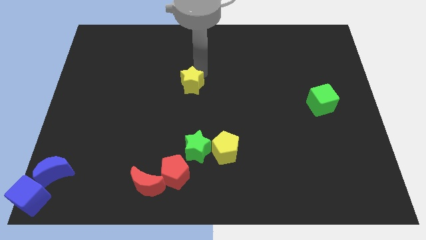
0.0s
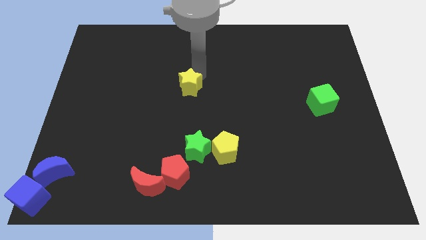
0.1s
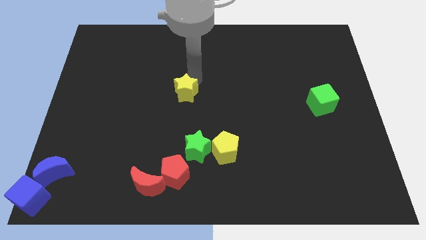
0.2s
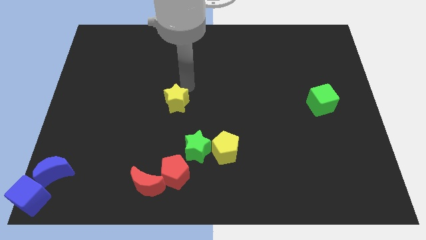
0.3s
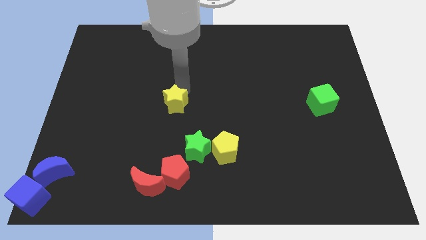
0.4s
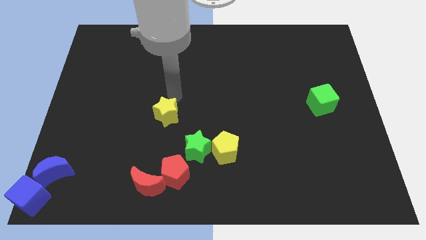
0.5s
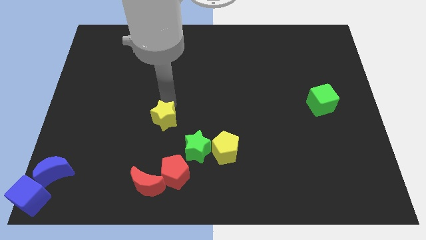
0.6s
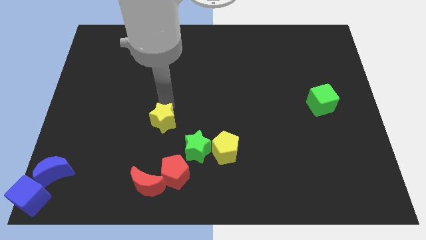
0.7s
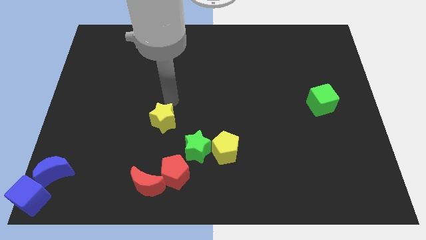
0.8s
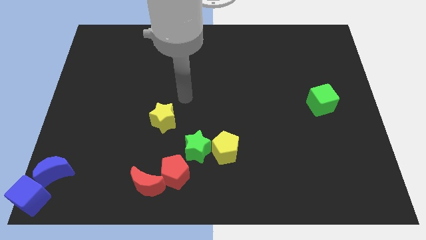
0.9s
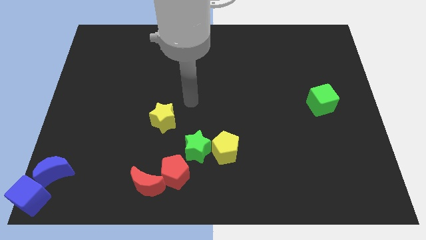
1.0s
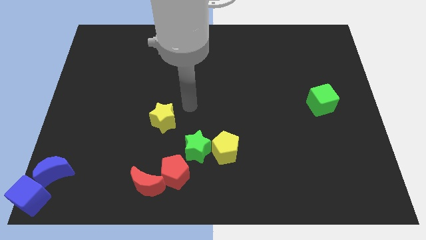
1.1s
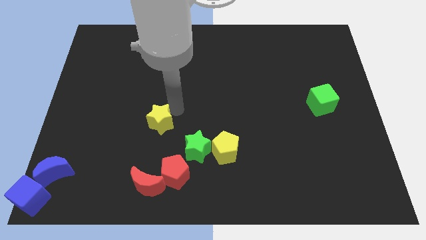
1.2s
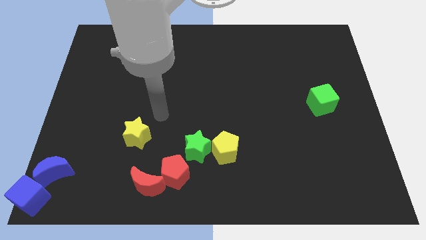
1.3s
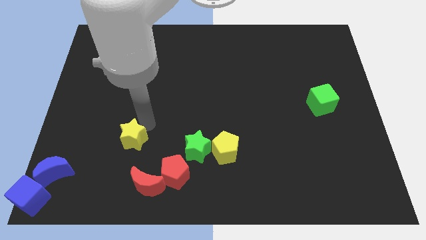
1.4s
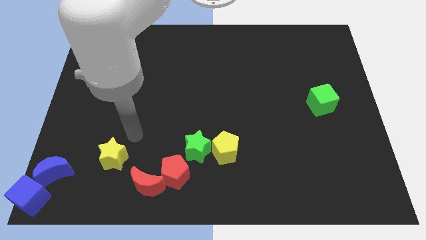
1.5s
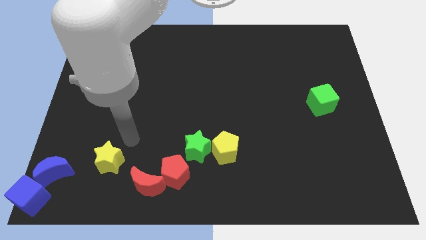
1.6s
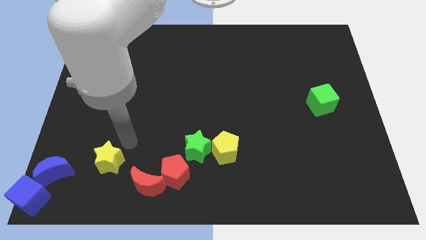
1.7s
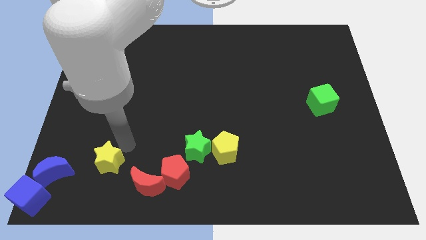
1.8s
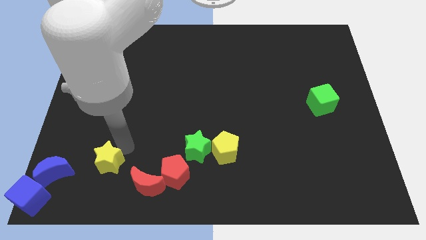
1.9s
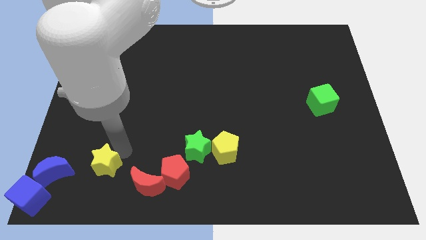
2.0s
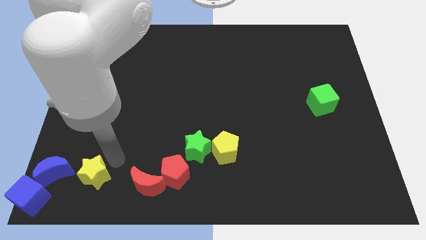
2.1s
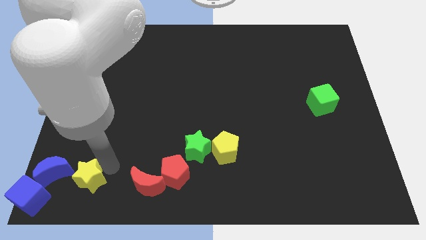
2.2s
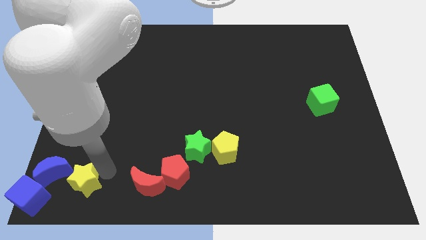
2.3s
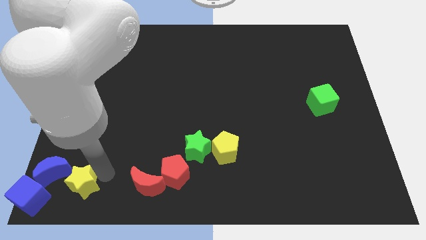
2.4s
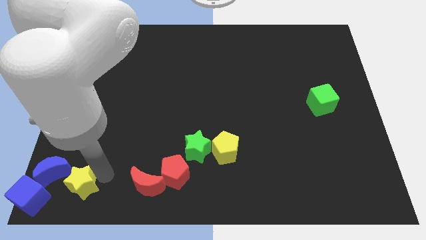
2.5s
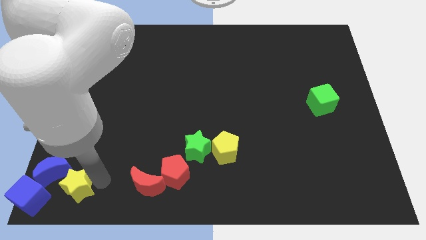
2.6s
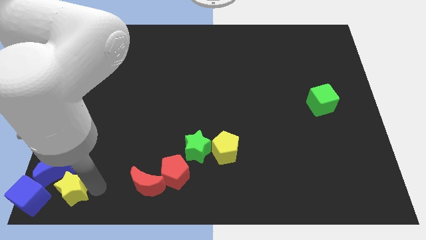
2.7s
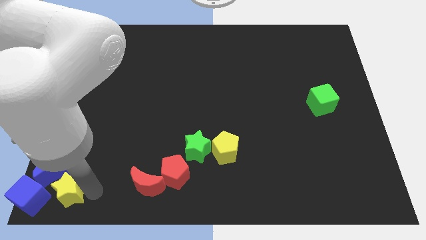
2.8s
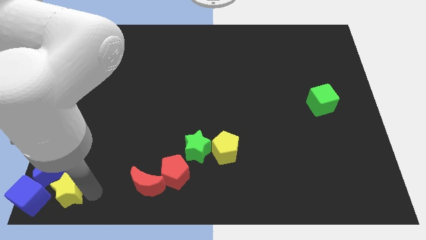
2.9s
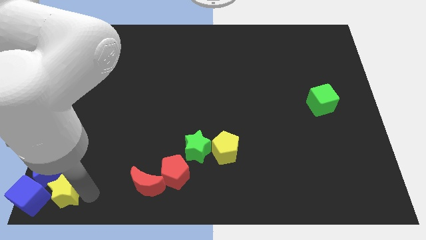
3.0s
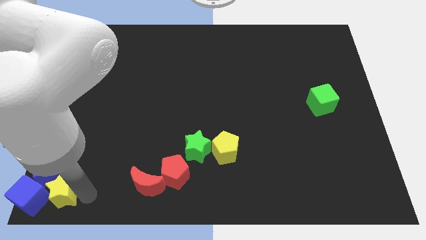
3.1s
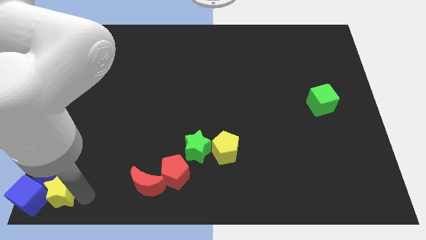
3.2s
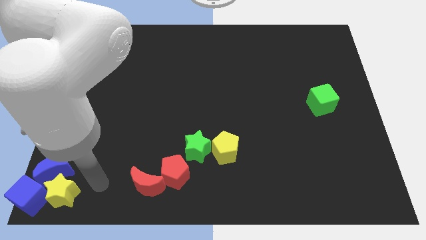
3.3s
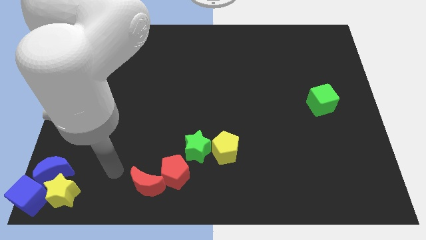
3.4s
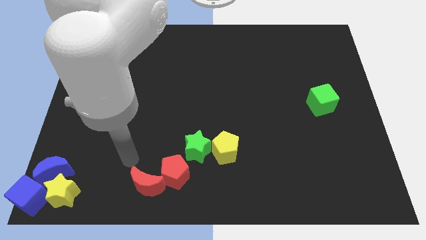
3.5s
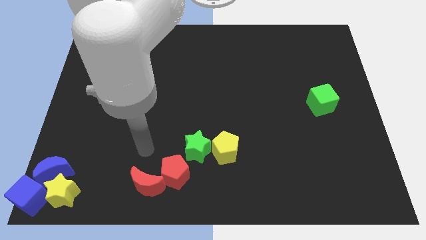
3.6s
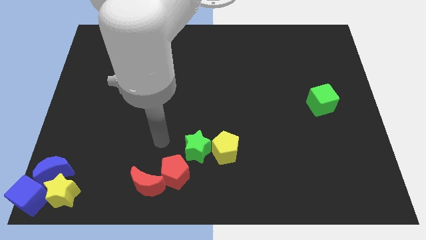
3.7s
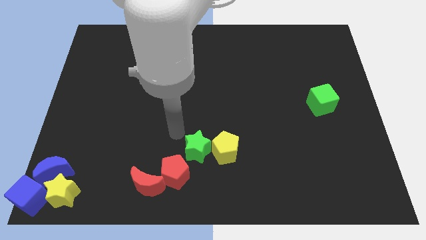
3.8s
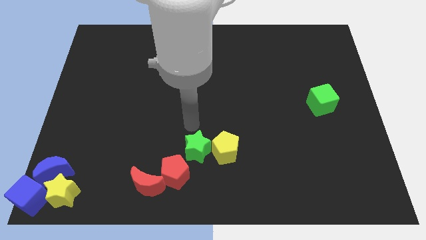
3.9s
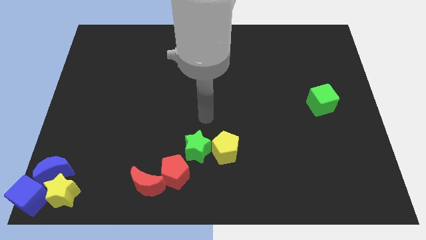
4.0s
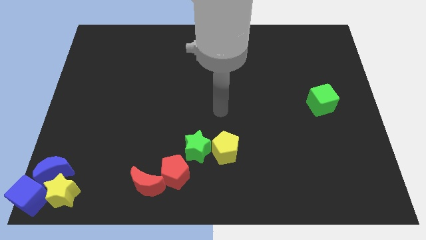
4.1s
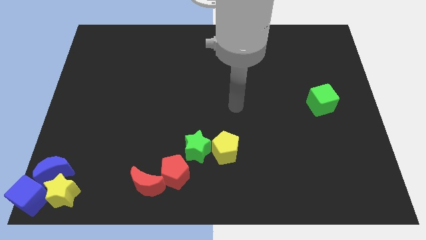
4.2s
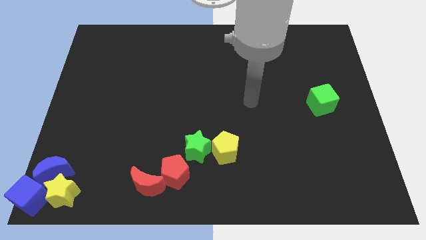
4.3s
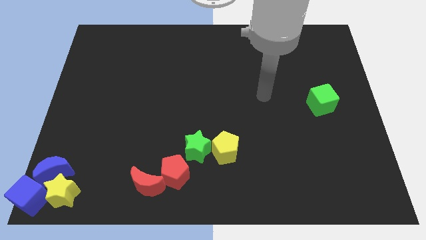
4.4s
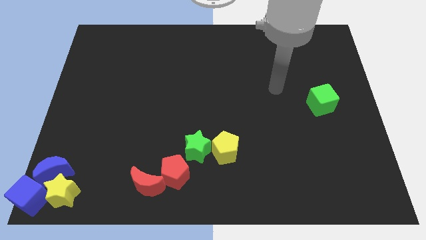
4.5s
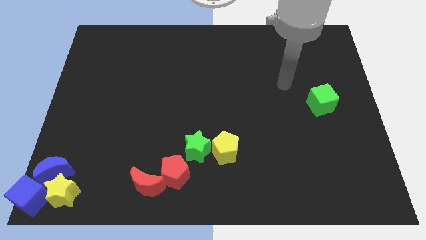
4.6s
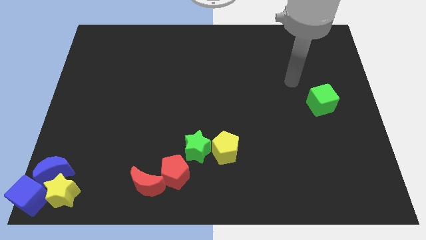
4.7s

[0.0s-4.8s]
push the yellow star to the right of the blue blocks

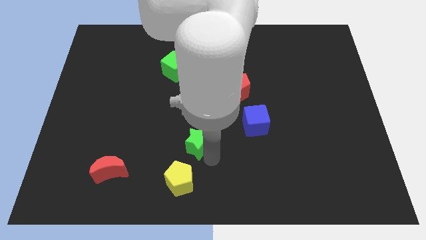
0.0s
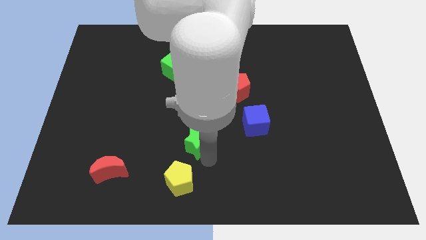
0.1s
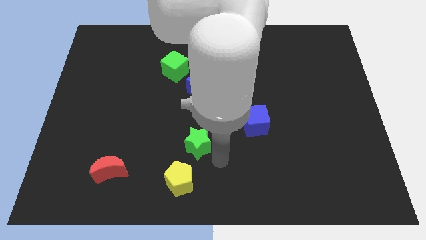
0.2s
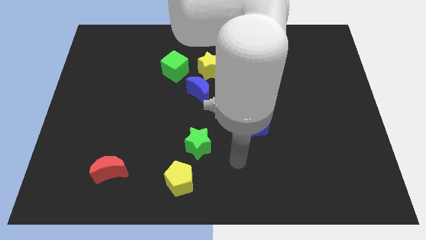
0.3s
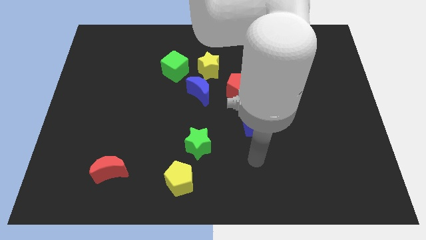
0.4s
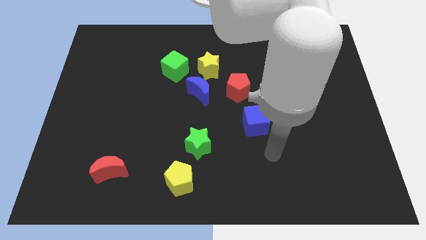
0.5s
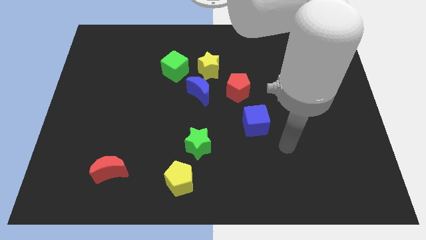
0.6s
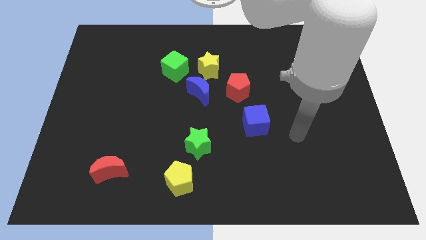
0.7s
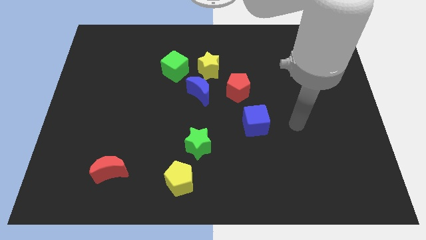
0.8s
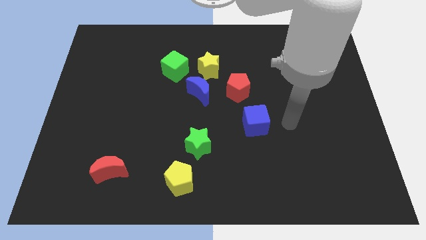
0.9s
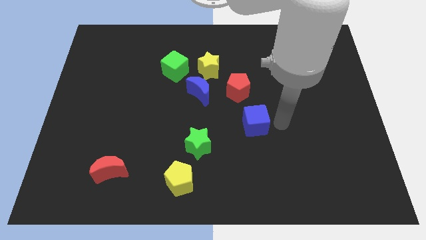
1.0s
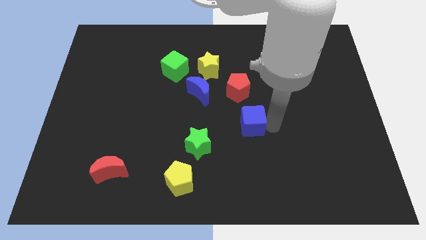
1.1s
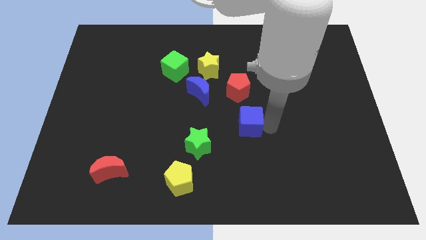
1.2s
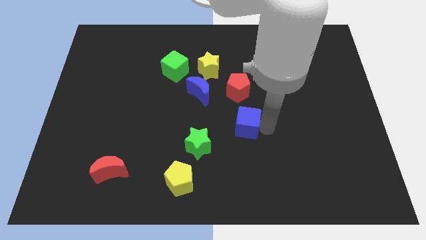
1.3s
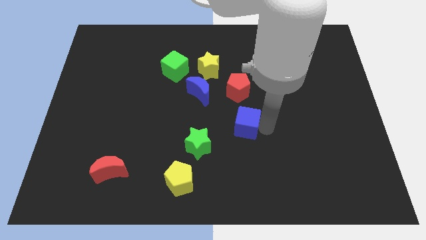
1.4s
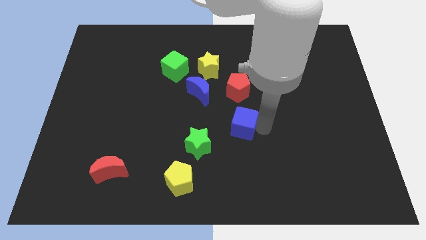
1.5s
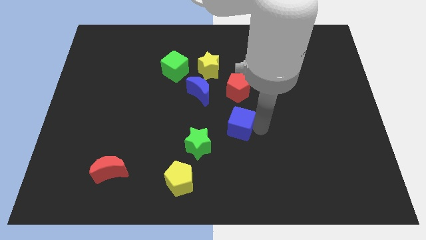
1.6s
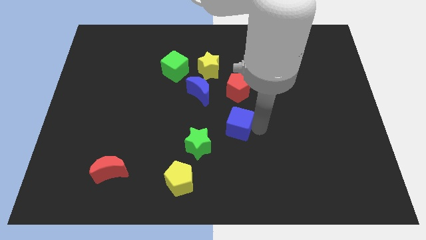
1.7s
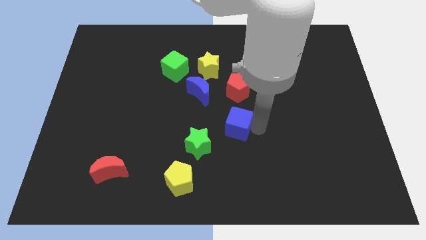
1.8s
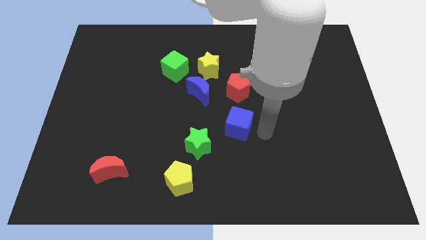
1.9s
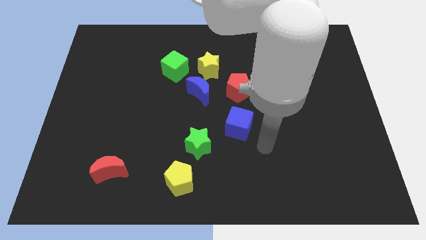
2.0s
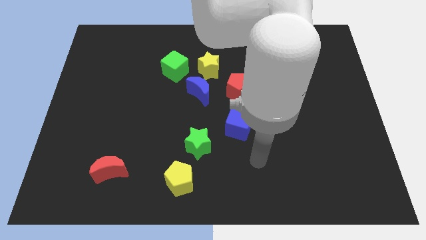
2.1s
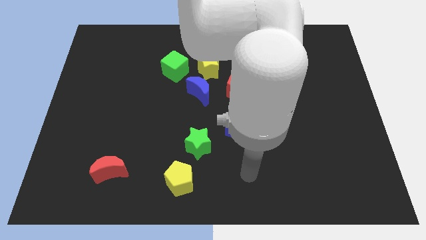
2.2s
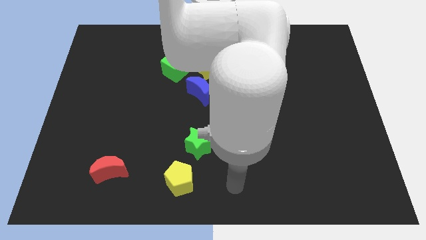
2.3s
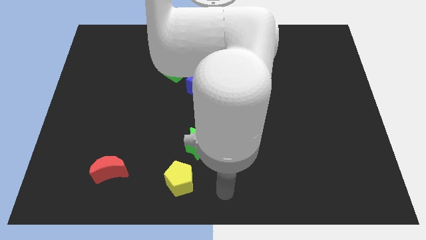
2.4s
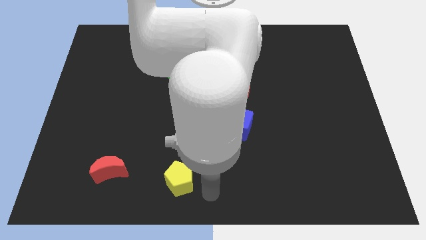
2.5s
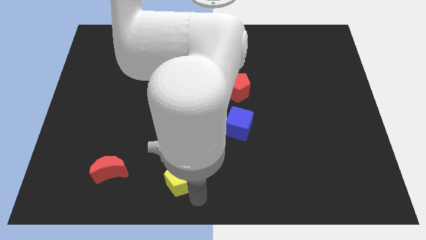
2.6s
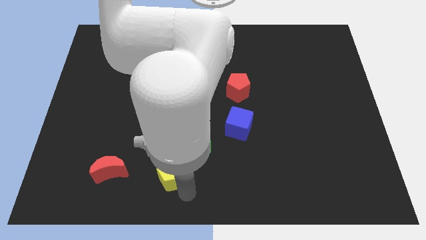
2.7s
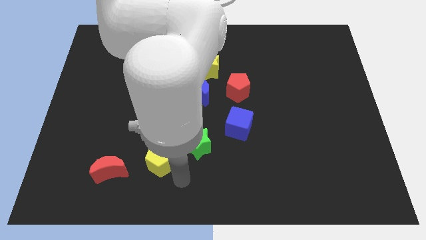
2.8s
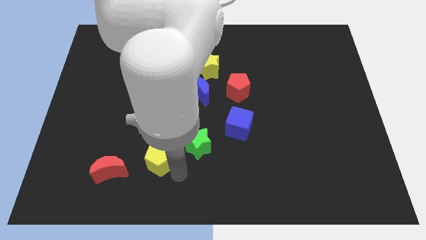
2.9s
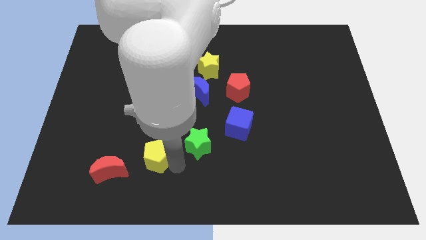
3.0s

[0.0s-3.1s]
place the yellow pentagon in between the green star and red moon

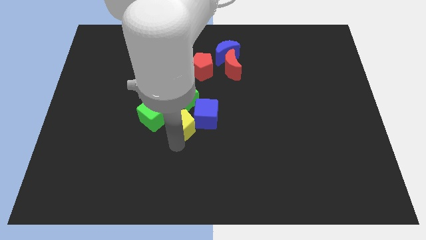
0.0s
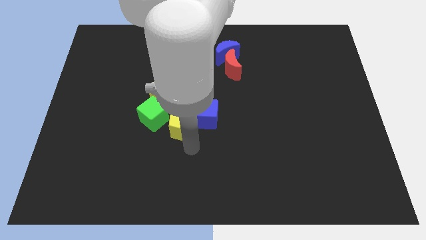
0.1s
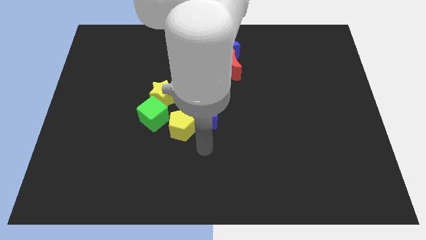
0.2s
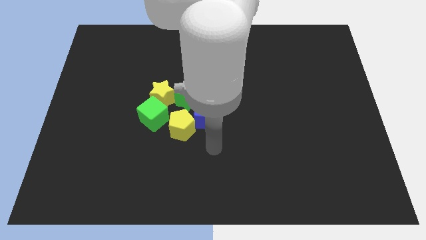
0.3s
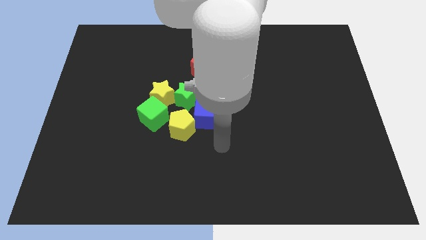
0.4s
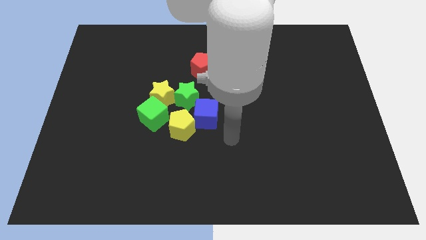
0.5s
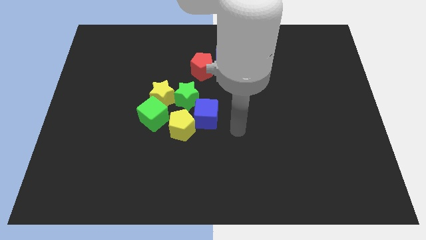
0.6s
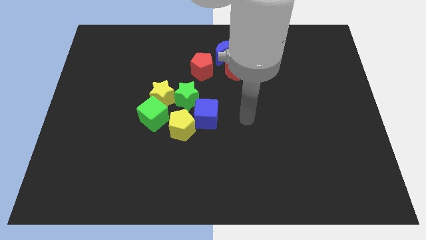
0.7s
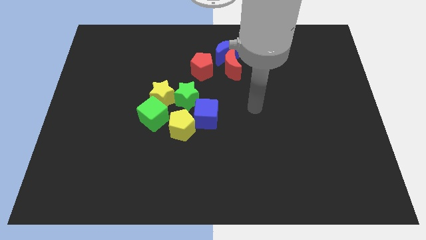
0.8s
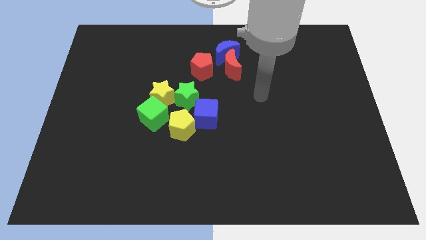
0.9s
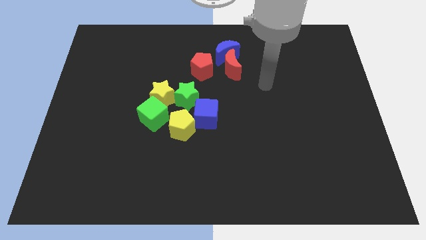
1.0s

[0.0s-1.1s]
move your hand away from yellow pentagon
